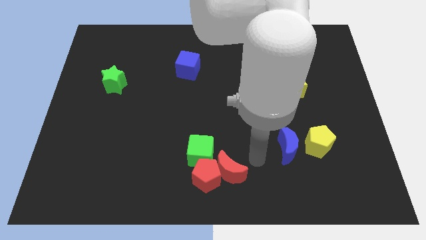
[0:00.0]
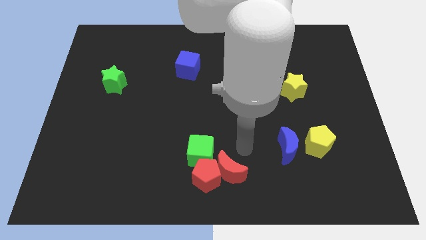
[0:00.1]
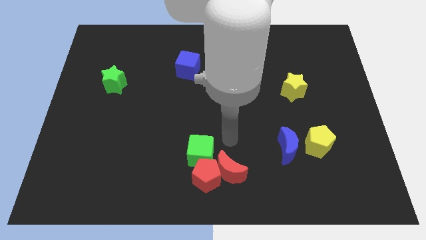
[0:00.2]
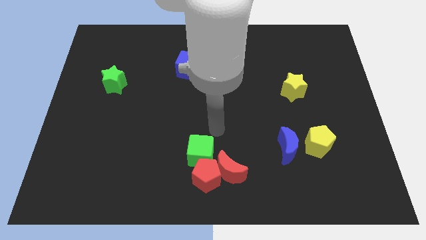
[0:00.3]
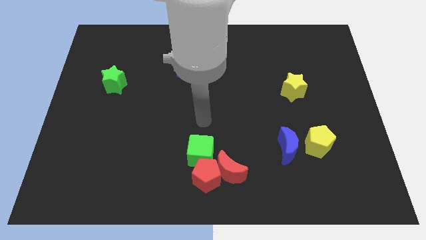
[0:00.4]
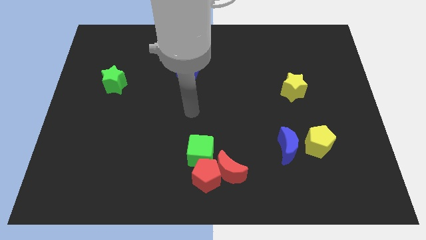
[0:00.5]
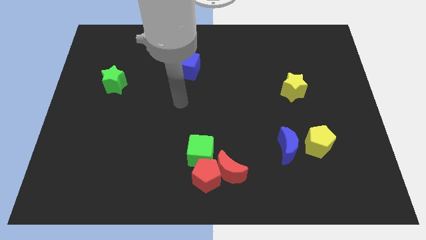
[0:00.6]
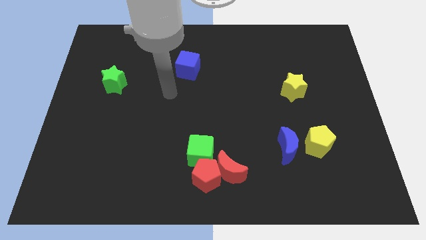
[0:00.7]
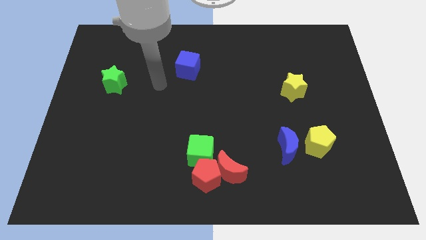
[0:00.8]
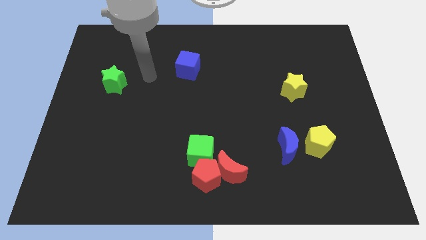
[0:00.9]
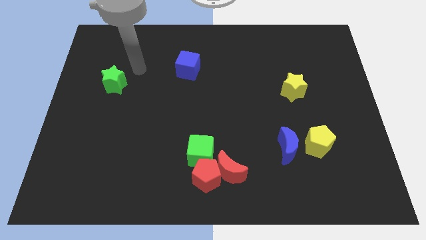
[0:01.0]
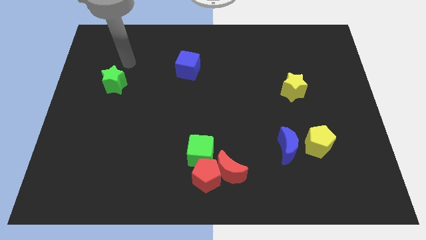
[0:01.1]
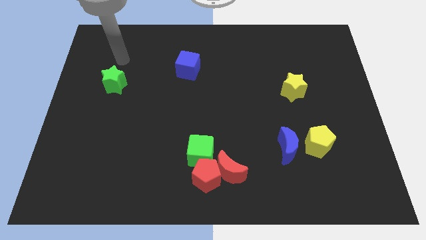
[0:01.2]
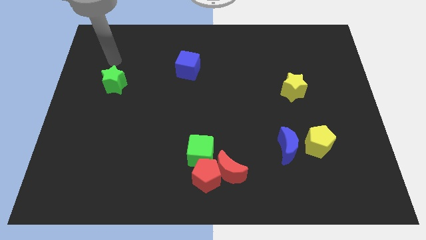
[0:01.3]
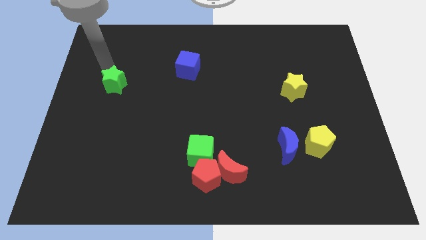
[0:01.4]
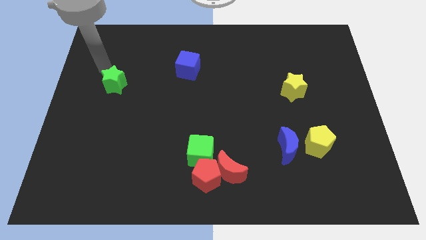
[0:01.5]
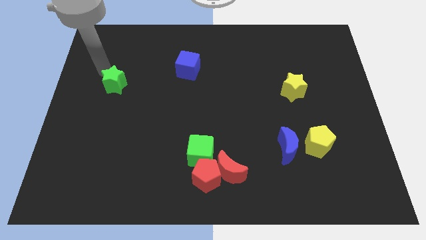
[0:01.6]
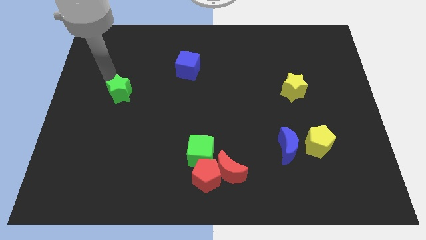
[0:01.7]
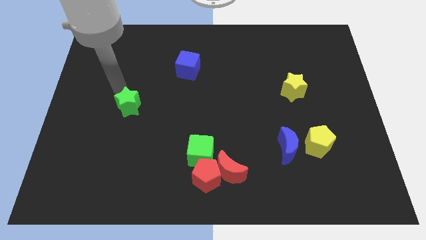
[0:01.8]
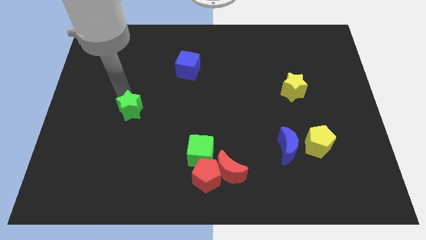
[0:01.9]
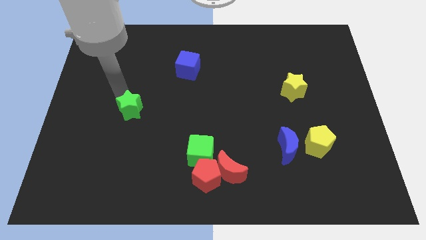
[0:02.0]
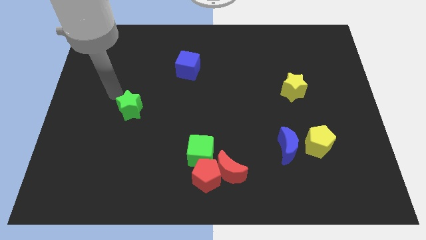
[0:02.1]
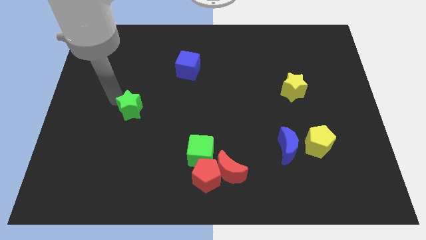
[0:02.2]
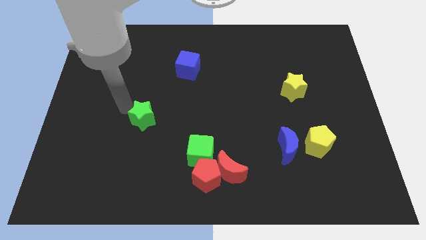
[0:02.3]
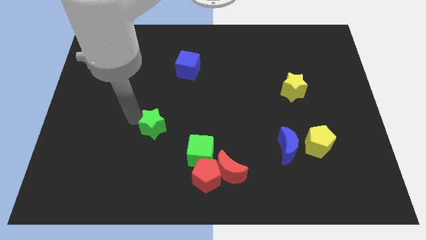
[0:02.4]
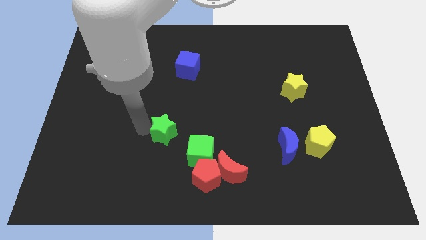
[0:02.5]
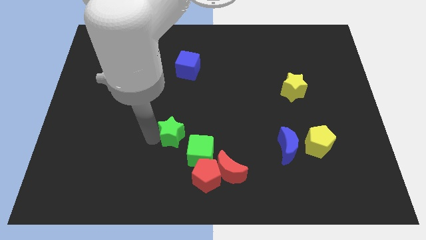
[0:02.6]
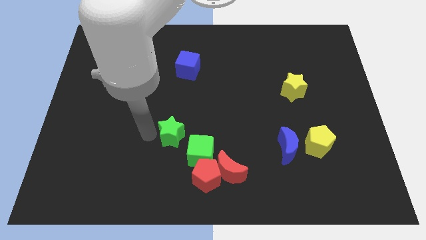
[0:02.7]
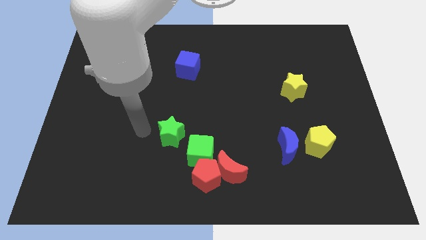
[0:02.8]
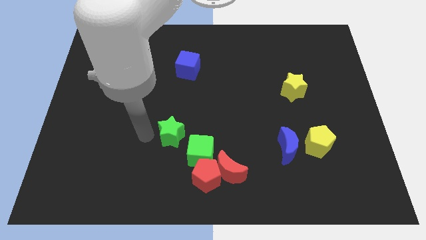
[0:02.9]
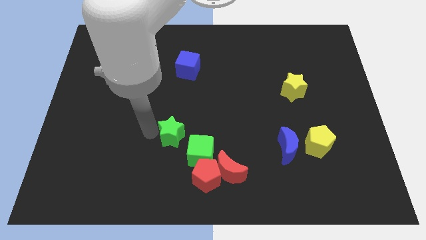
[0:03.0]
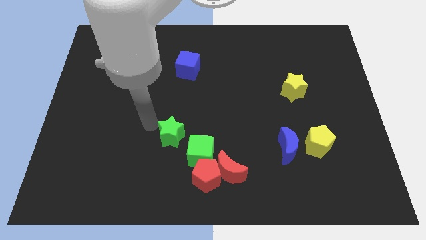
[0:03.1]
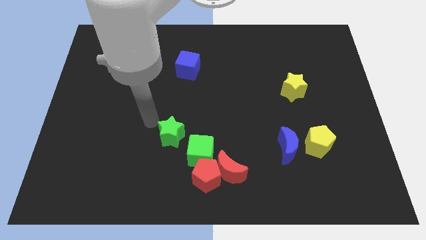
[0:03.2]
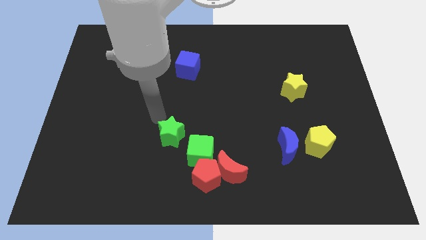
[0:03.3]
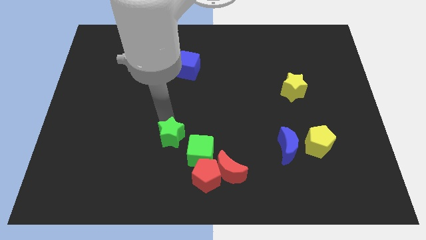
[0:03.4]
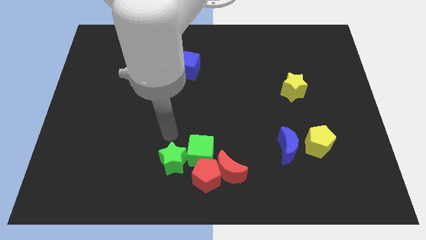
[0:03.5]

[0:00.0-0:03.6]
slide the green star to the top left side of the green cube

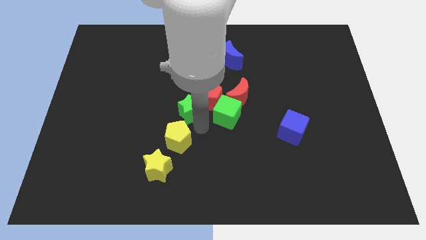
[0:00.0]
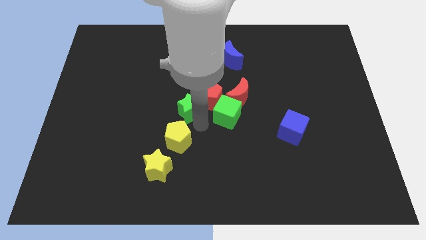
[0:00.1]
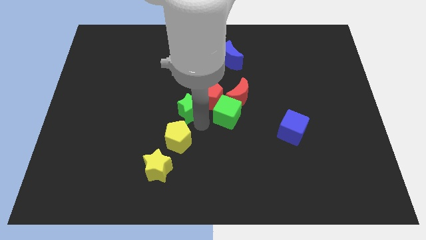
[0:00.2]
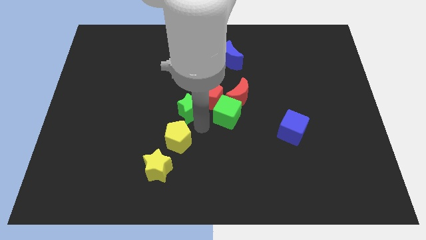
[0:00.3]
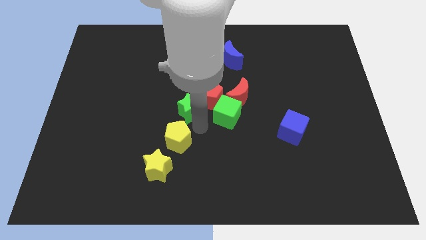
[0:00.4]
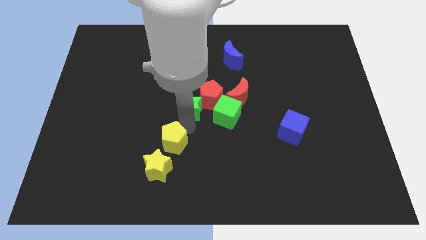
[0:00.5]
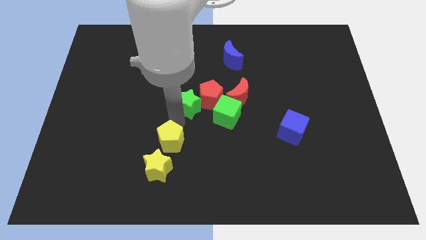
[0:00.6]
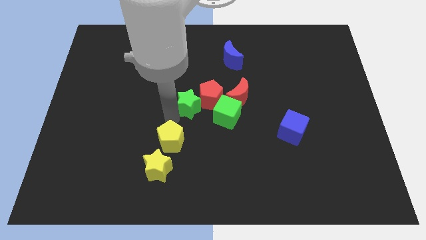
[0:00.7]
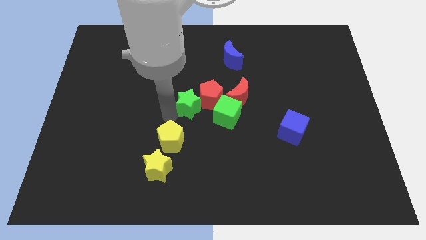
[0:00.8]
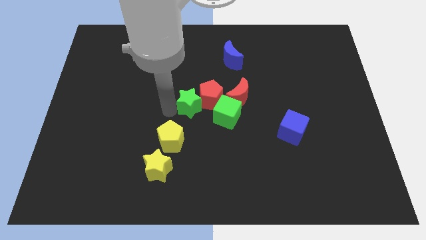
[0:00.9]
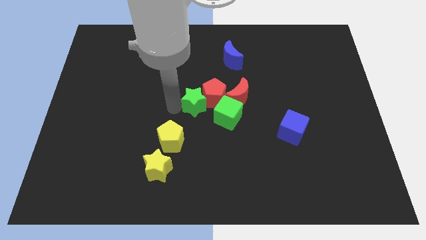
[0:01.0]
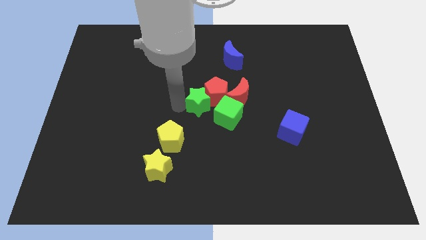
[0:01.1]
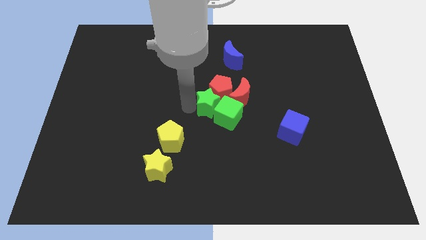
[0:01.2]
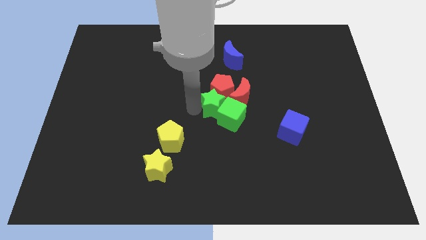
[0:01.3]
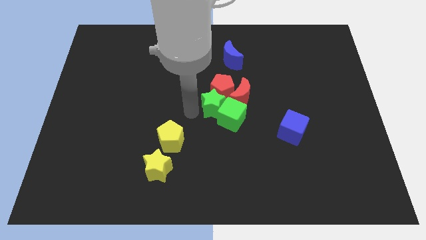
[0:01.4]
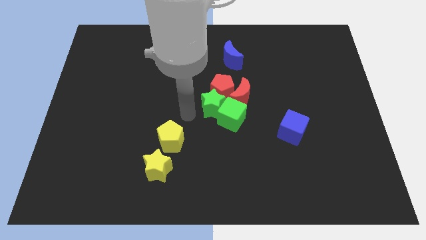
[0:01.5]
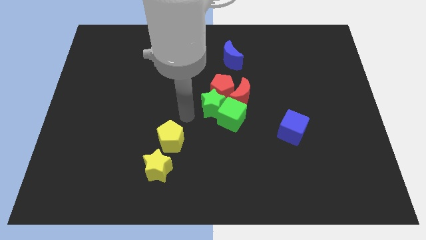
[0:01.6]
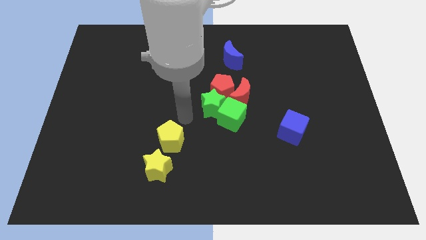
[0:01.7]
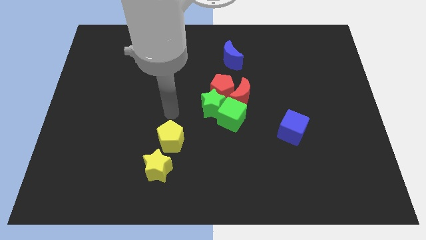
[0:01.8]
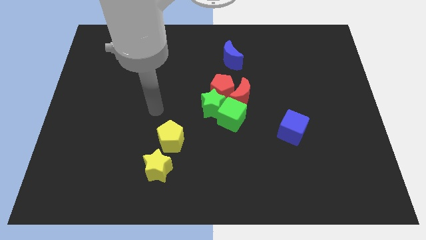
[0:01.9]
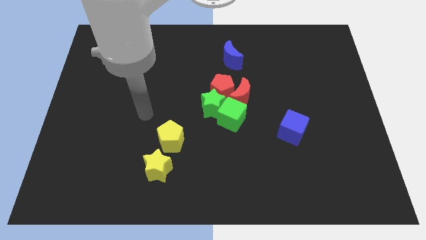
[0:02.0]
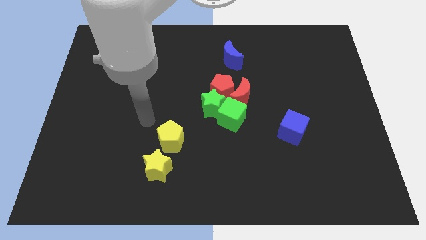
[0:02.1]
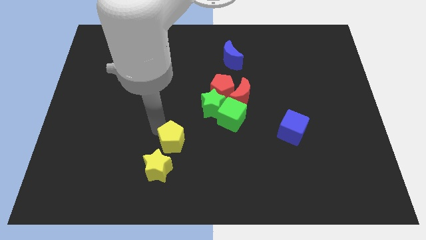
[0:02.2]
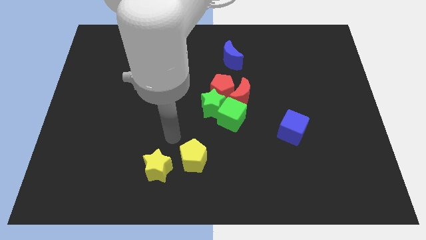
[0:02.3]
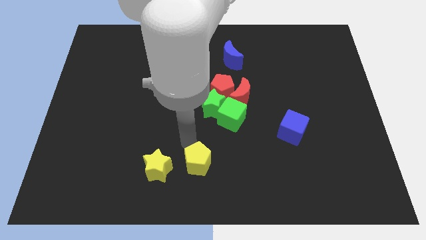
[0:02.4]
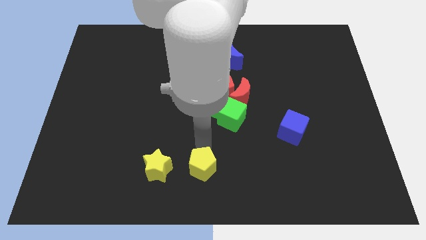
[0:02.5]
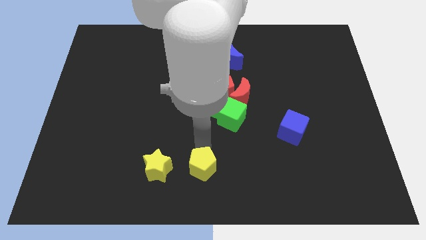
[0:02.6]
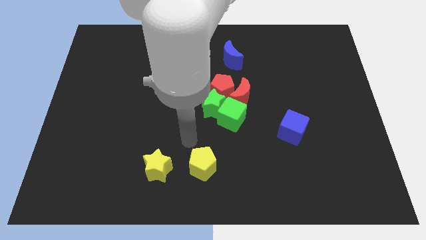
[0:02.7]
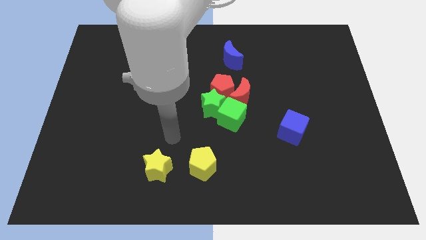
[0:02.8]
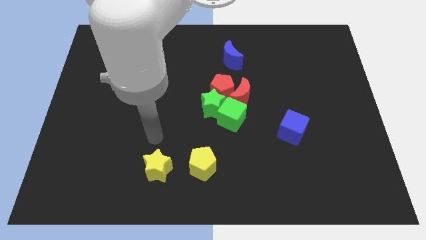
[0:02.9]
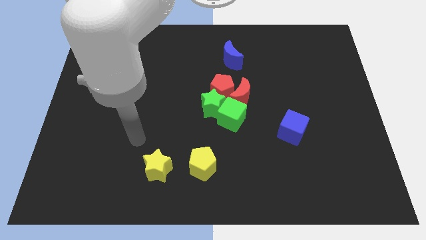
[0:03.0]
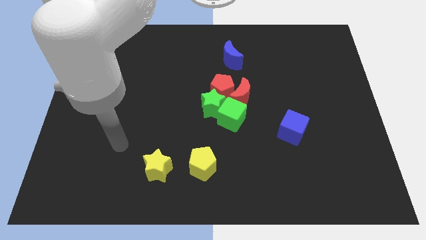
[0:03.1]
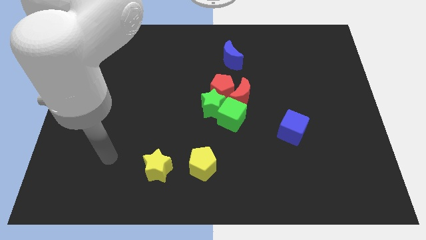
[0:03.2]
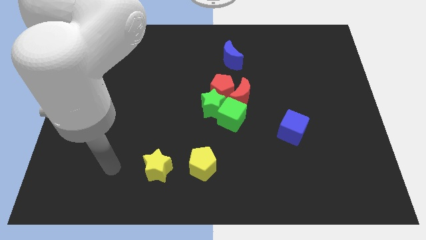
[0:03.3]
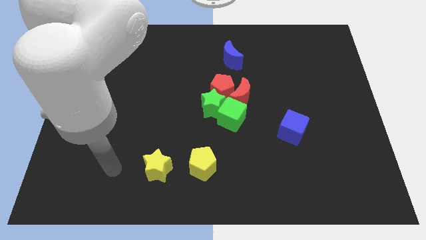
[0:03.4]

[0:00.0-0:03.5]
place the yellow pentagon right to the yellow star

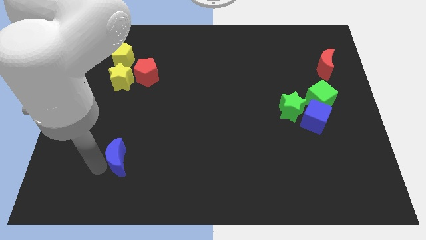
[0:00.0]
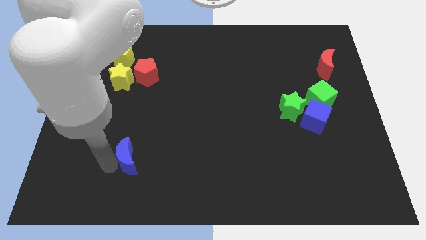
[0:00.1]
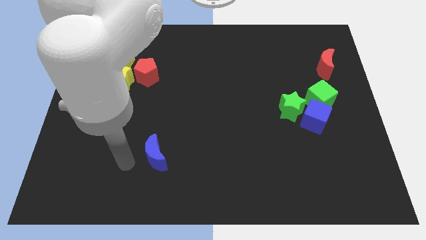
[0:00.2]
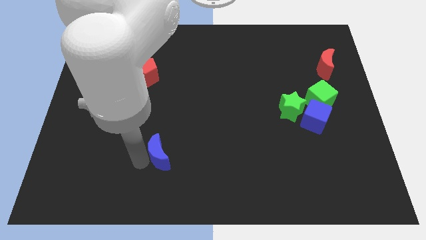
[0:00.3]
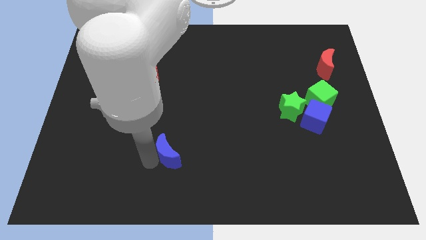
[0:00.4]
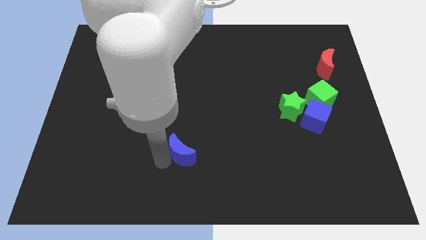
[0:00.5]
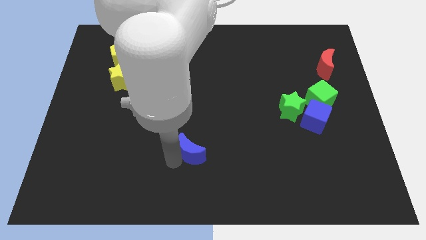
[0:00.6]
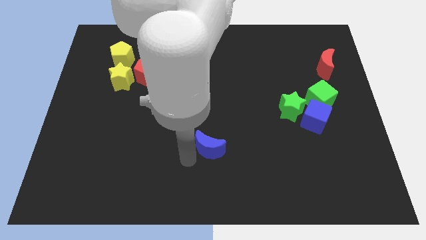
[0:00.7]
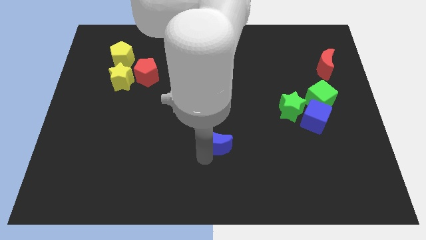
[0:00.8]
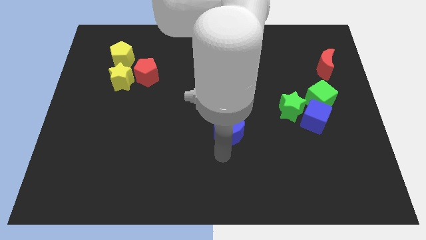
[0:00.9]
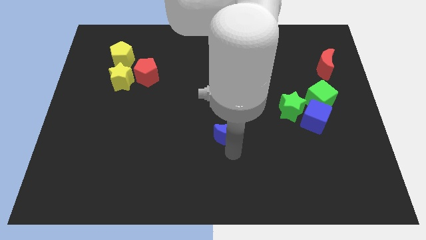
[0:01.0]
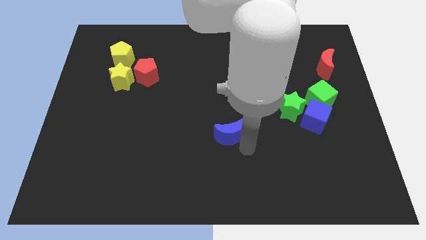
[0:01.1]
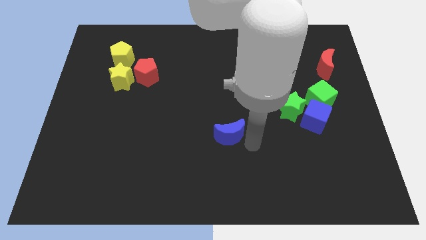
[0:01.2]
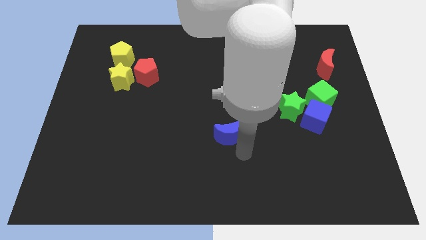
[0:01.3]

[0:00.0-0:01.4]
move the blue crescent close to the green star

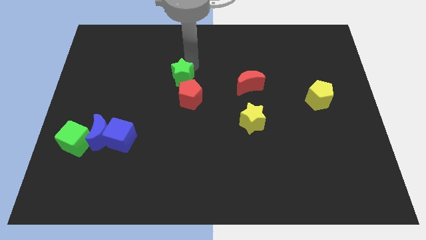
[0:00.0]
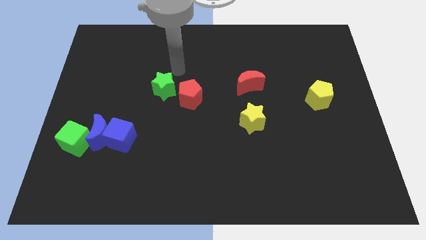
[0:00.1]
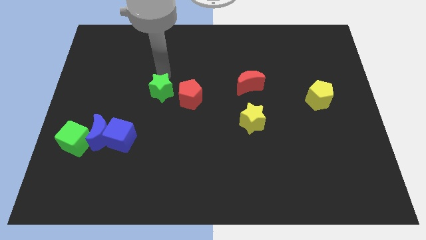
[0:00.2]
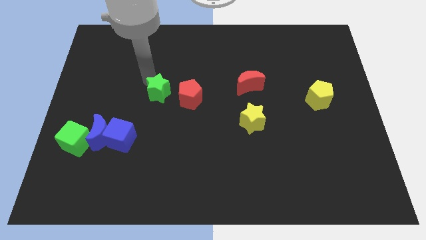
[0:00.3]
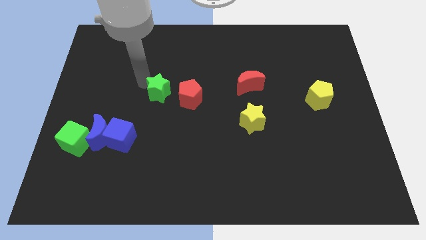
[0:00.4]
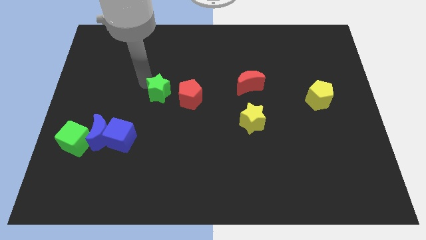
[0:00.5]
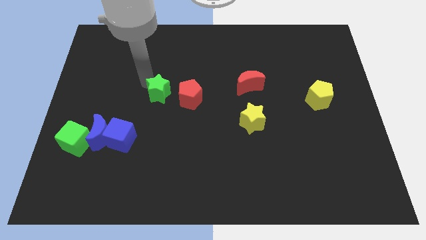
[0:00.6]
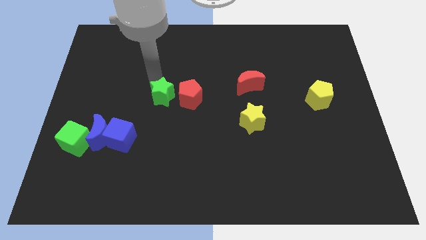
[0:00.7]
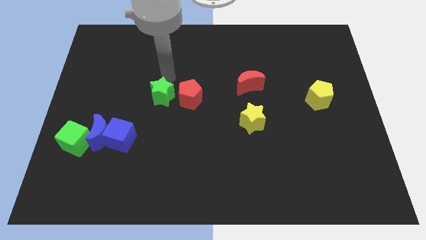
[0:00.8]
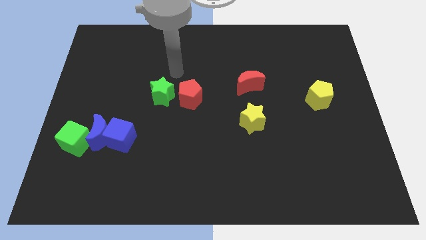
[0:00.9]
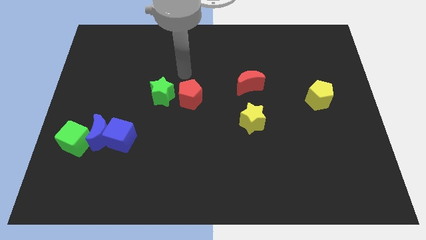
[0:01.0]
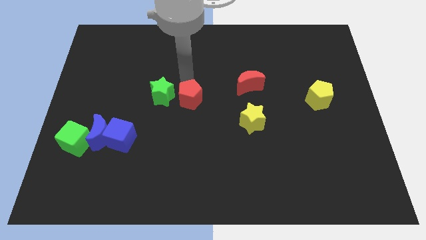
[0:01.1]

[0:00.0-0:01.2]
place the green cube to the left of red pentagon
